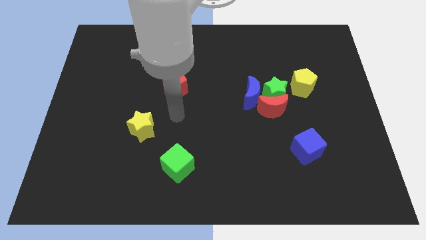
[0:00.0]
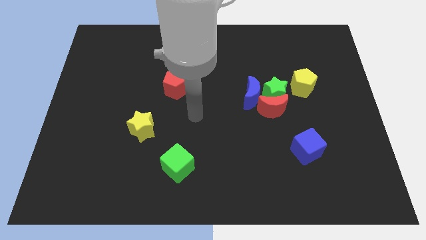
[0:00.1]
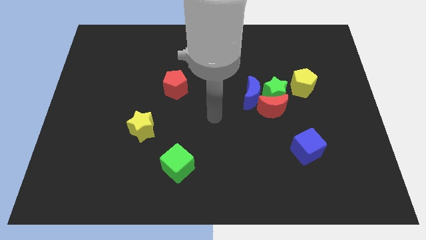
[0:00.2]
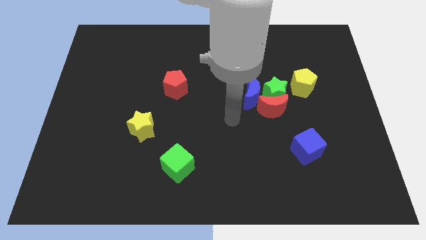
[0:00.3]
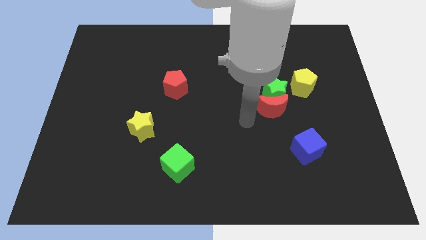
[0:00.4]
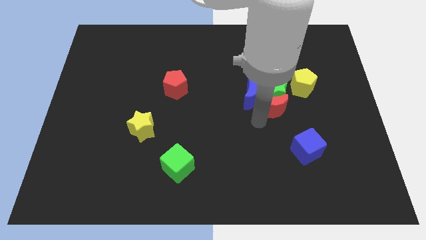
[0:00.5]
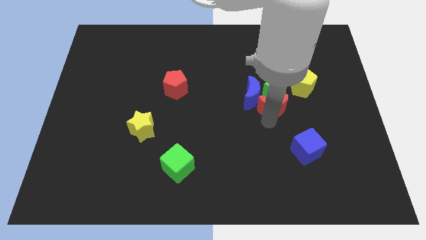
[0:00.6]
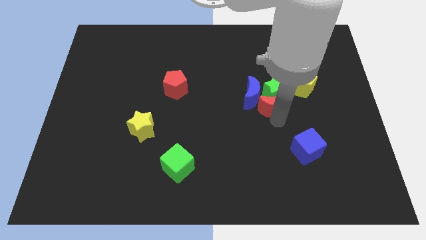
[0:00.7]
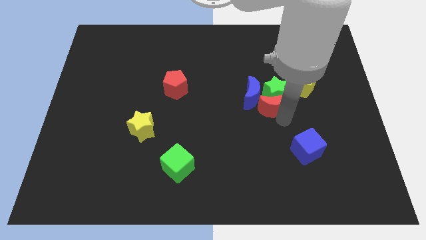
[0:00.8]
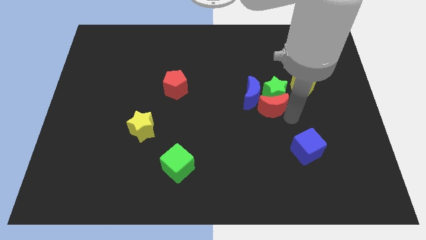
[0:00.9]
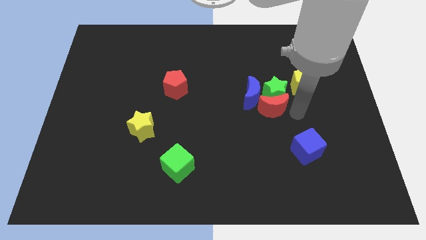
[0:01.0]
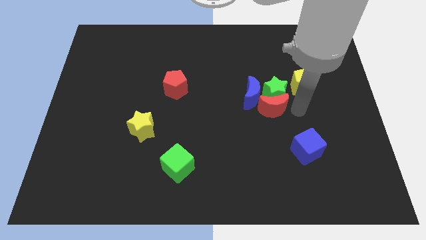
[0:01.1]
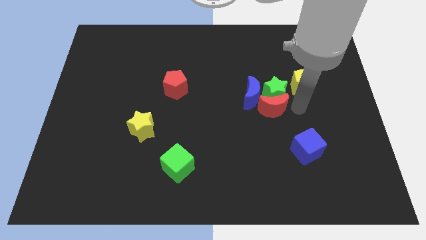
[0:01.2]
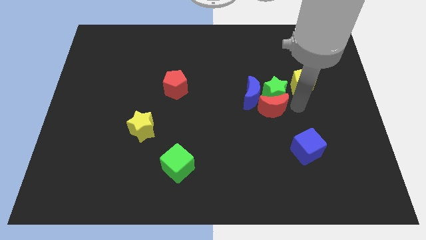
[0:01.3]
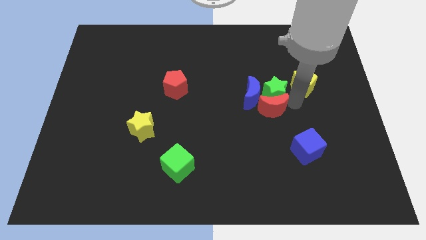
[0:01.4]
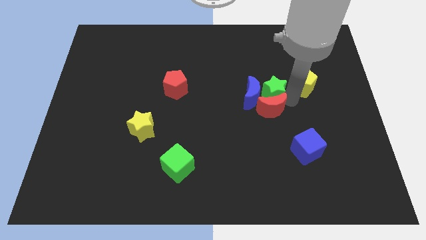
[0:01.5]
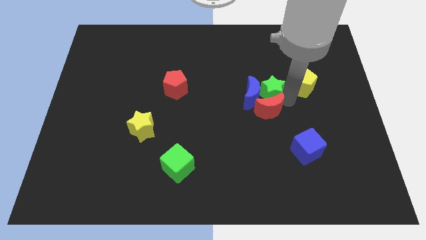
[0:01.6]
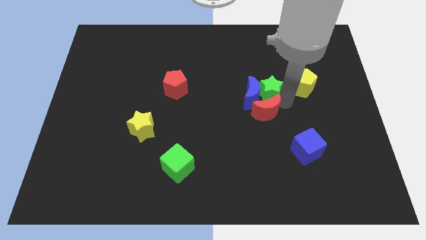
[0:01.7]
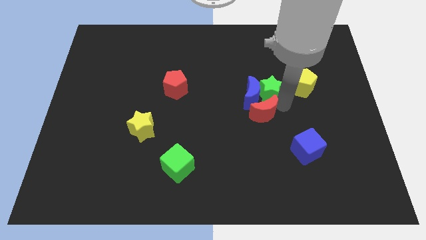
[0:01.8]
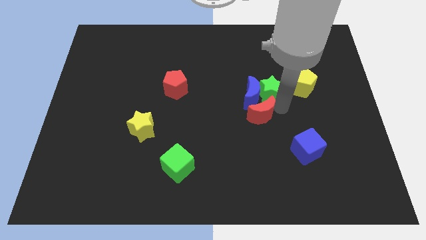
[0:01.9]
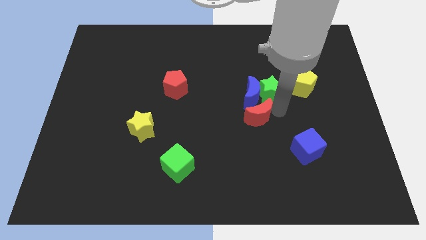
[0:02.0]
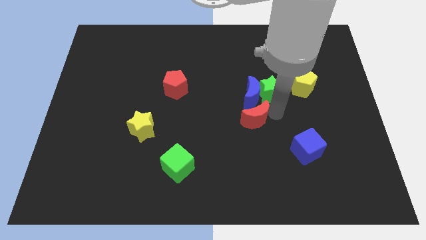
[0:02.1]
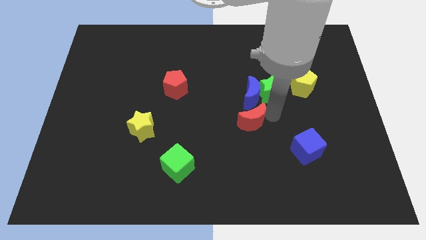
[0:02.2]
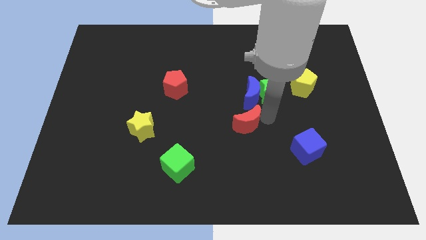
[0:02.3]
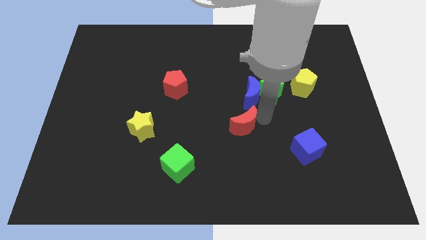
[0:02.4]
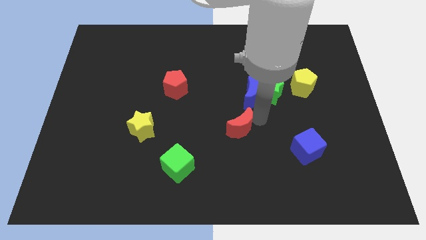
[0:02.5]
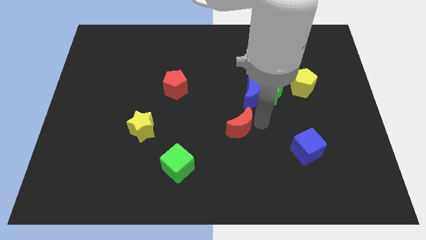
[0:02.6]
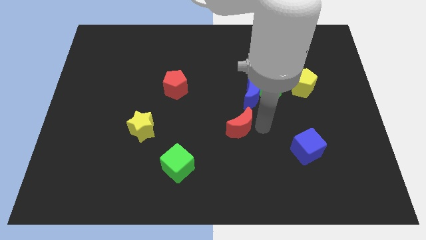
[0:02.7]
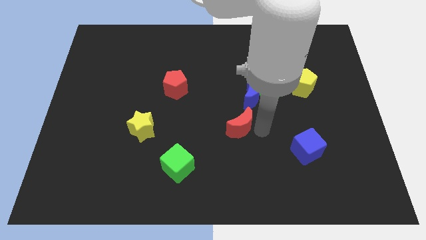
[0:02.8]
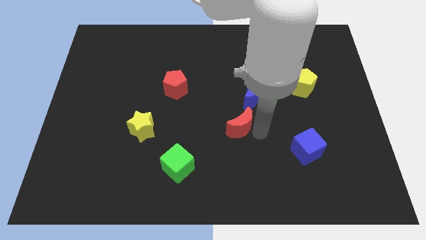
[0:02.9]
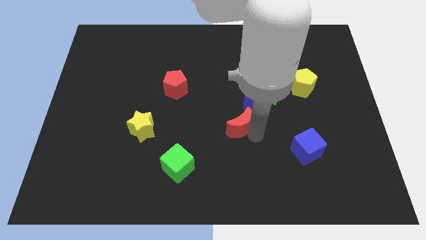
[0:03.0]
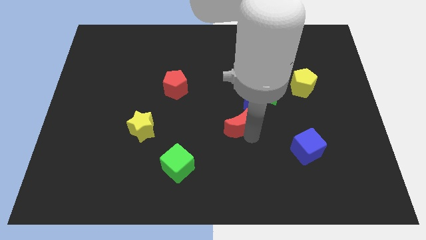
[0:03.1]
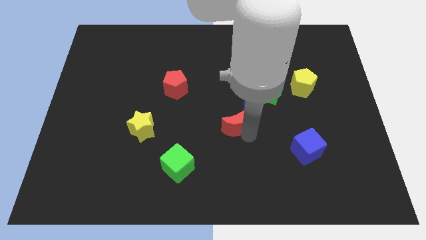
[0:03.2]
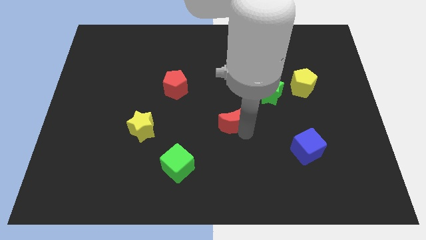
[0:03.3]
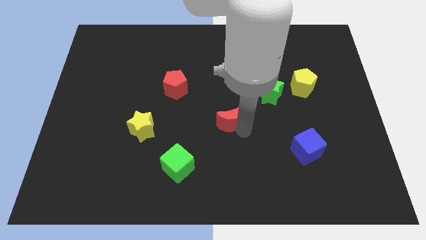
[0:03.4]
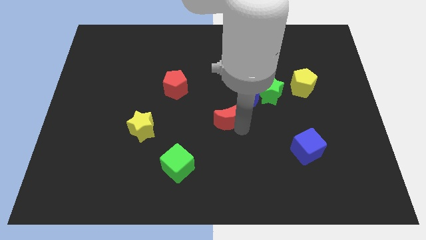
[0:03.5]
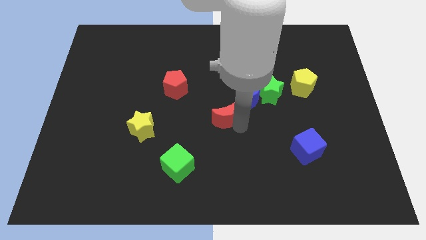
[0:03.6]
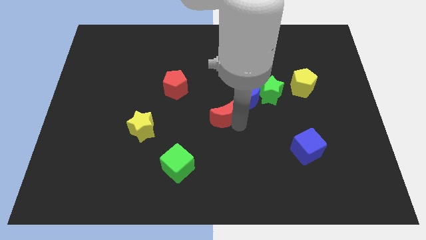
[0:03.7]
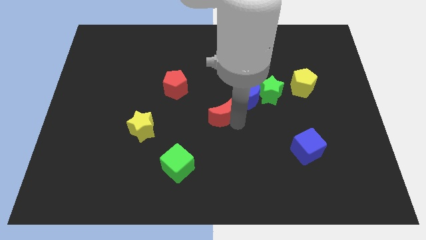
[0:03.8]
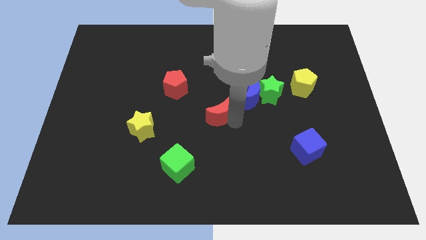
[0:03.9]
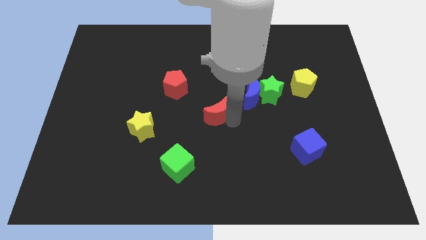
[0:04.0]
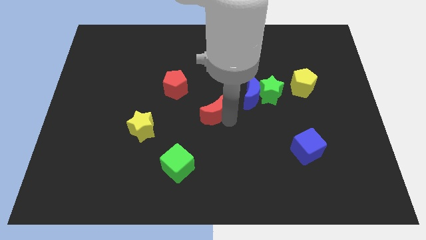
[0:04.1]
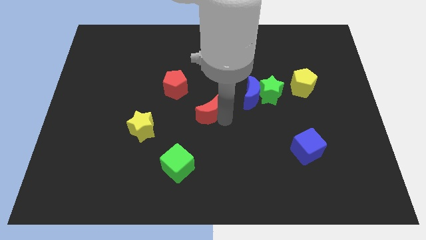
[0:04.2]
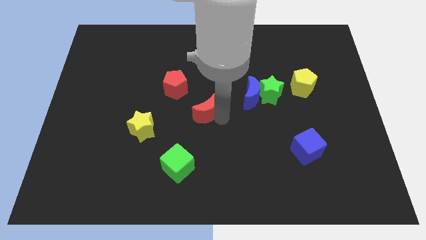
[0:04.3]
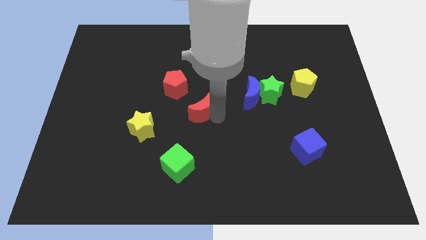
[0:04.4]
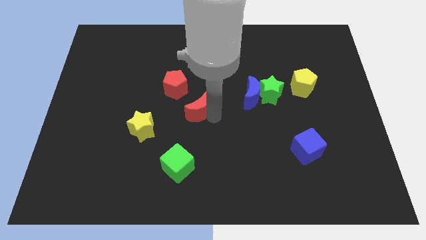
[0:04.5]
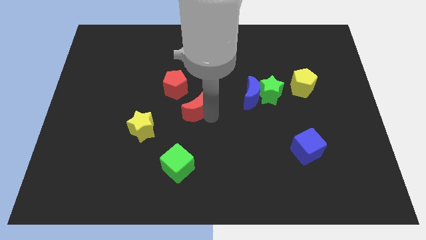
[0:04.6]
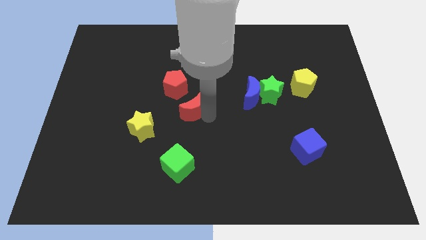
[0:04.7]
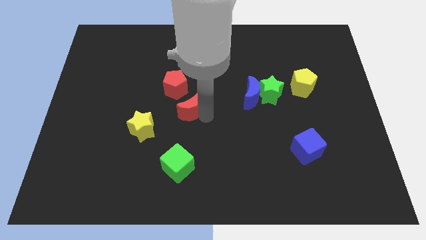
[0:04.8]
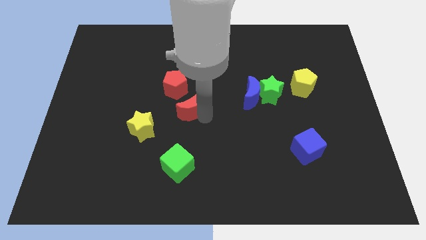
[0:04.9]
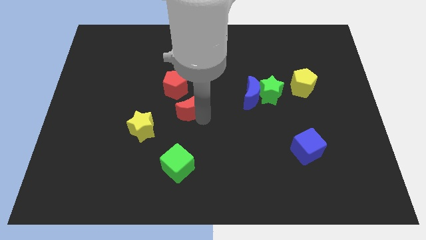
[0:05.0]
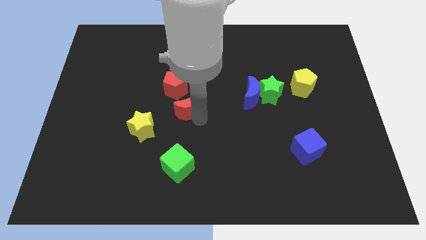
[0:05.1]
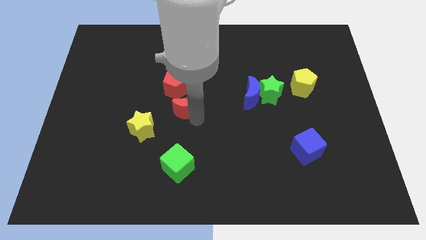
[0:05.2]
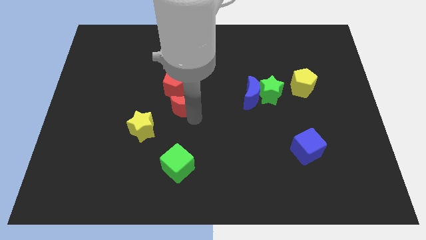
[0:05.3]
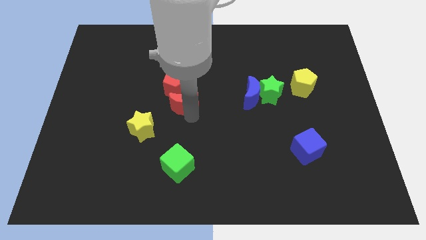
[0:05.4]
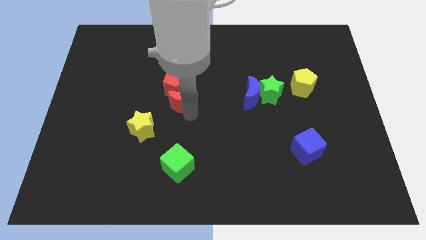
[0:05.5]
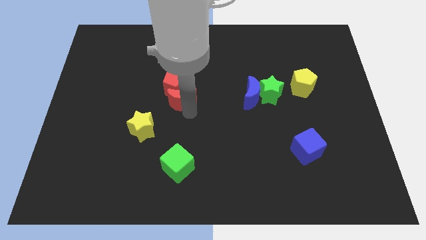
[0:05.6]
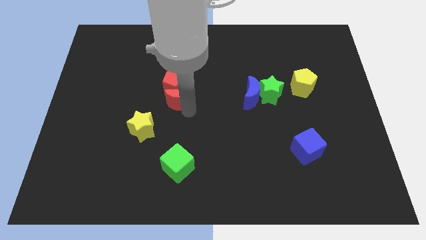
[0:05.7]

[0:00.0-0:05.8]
put the red moon next to the red pentagon

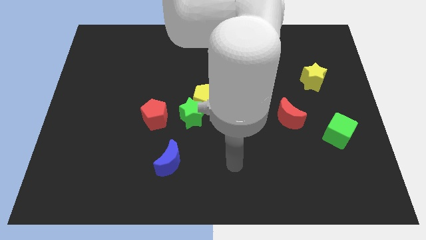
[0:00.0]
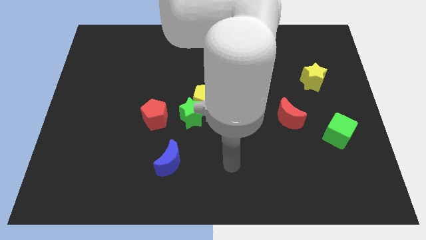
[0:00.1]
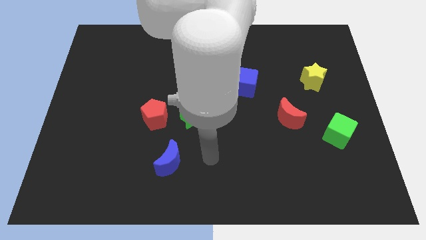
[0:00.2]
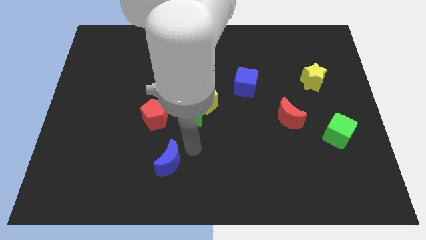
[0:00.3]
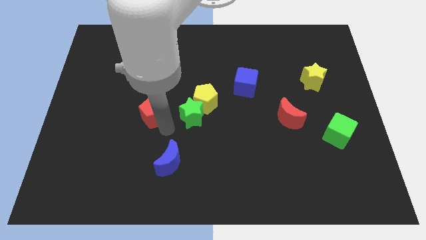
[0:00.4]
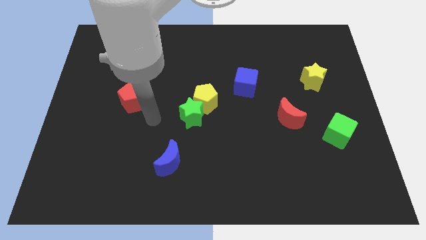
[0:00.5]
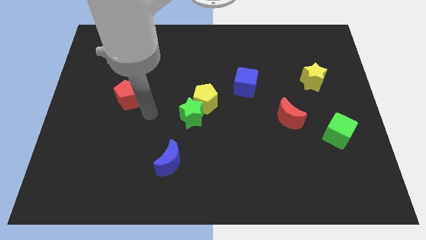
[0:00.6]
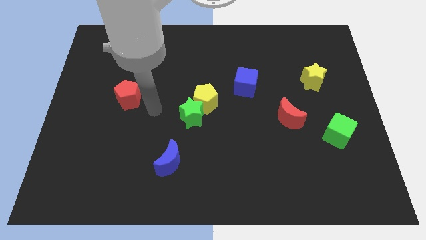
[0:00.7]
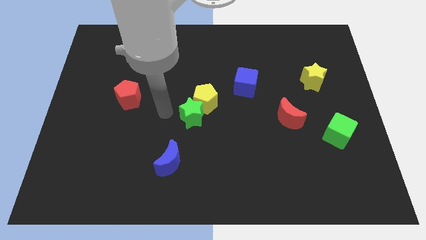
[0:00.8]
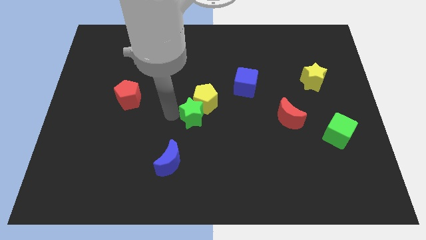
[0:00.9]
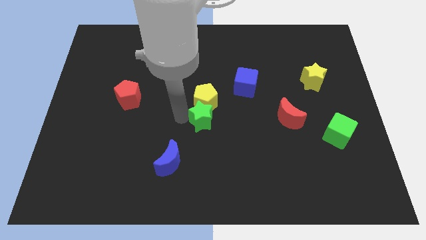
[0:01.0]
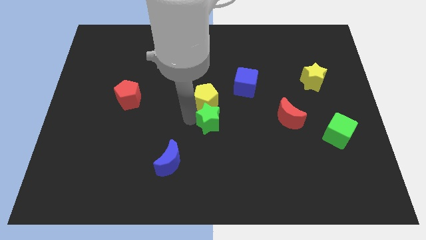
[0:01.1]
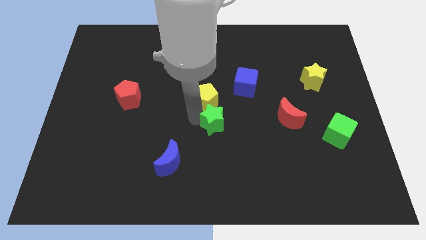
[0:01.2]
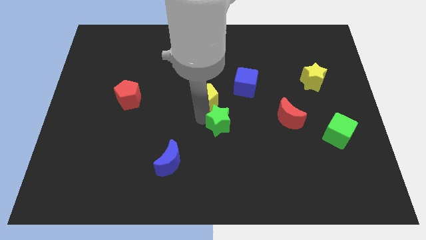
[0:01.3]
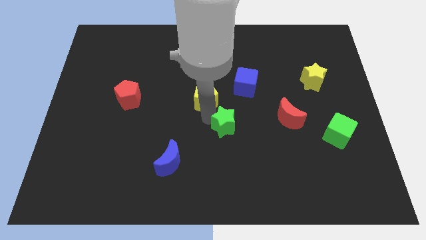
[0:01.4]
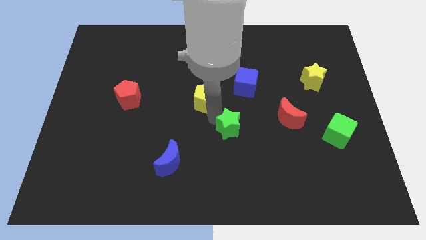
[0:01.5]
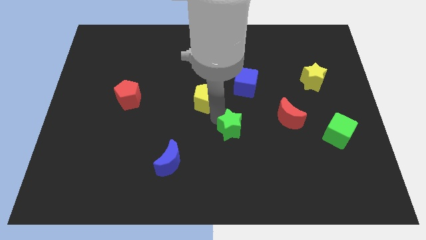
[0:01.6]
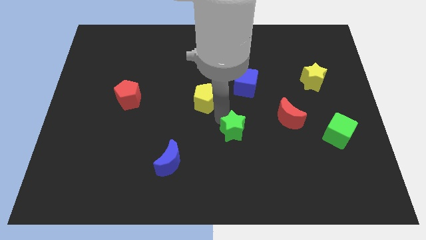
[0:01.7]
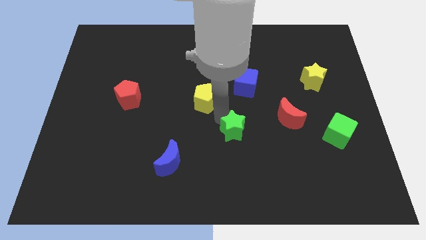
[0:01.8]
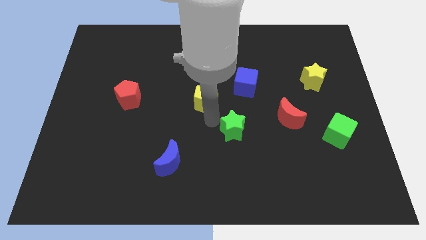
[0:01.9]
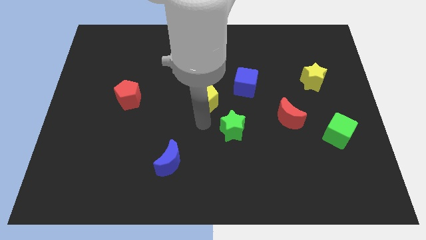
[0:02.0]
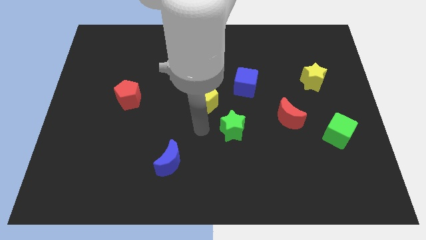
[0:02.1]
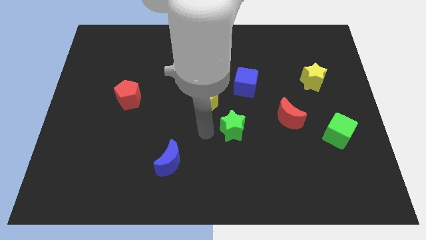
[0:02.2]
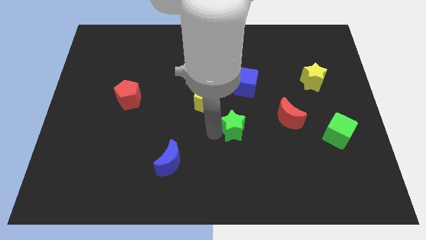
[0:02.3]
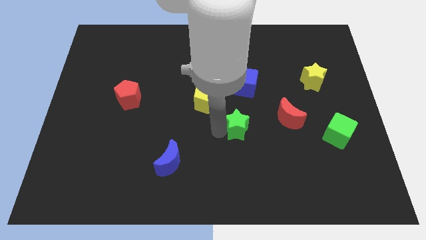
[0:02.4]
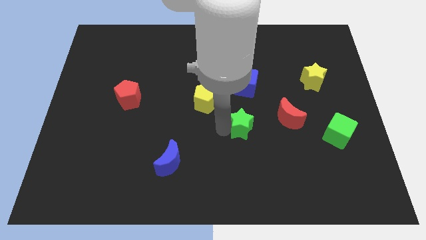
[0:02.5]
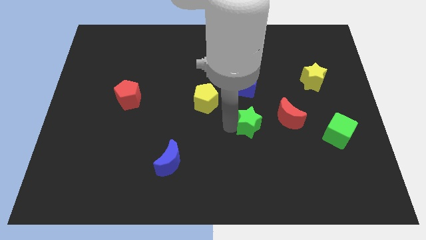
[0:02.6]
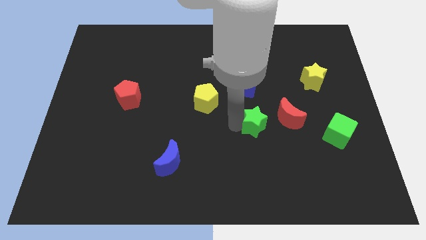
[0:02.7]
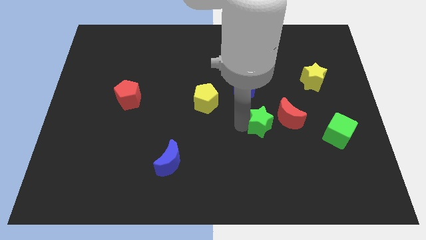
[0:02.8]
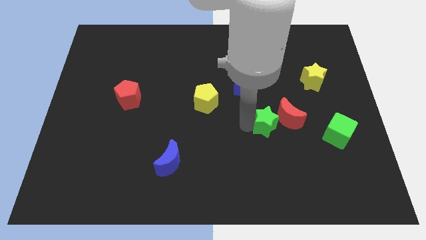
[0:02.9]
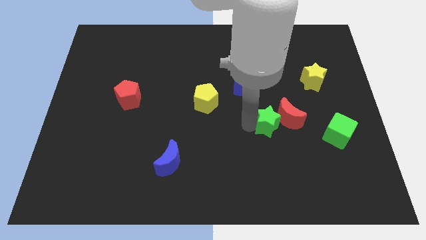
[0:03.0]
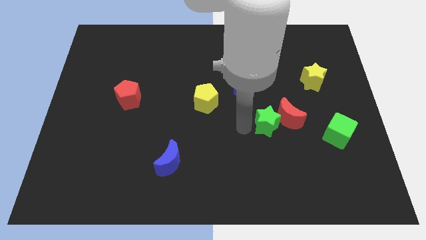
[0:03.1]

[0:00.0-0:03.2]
move the green star to the red moon
